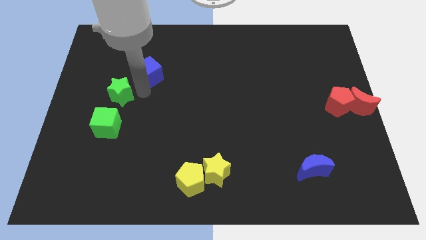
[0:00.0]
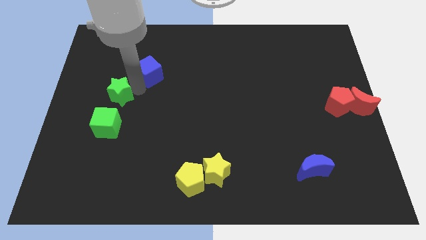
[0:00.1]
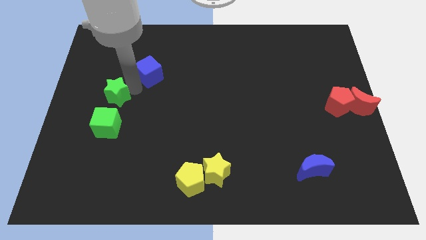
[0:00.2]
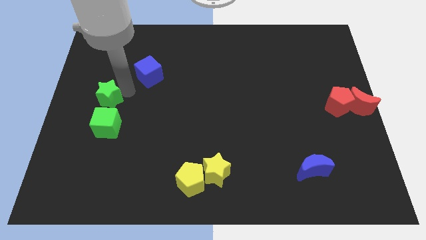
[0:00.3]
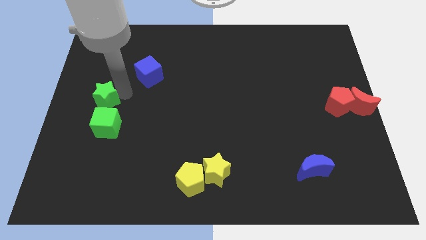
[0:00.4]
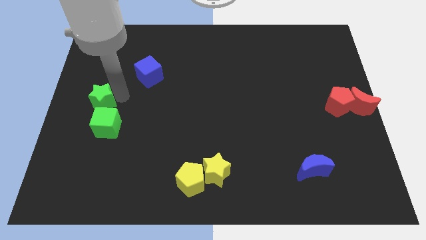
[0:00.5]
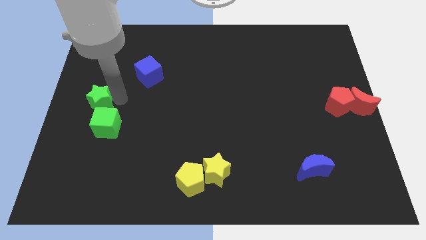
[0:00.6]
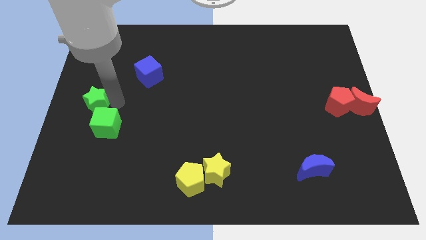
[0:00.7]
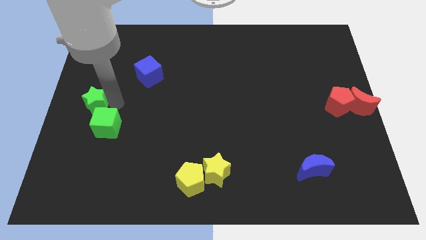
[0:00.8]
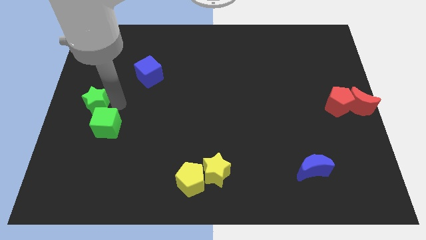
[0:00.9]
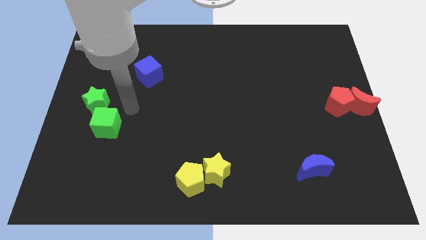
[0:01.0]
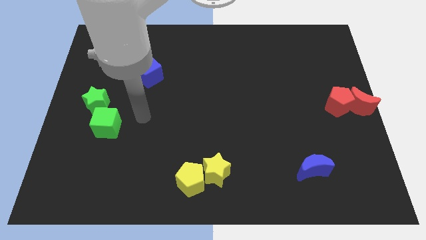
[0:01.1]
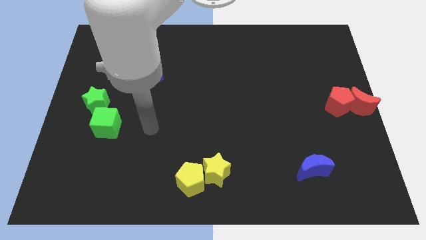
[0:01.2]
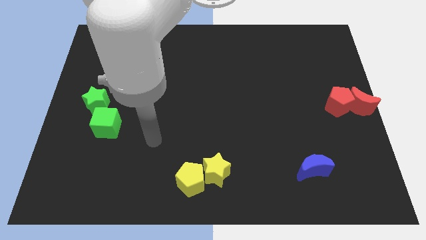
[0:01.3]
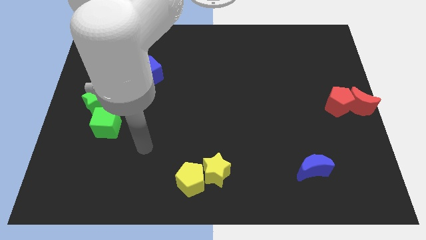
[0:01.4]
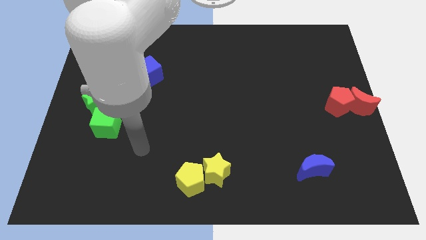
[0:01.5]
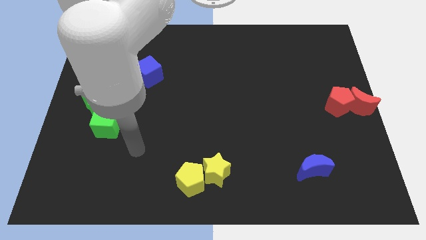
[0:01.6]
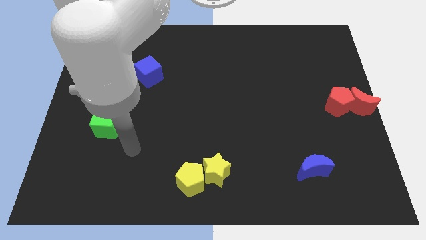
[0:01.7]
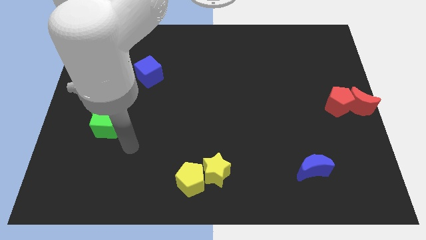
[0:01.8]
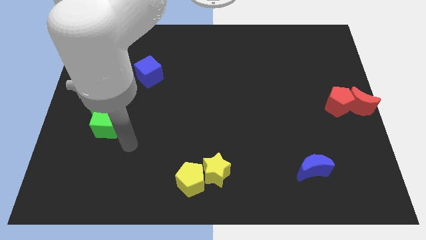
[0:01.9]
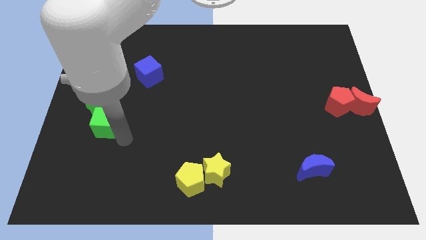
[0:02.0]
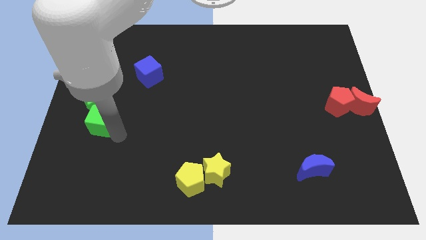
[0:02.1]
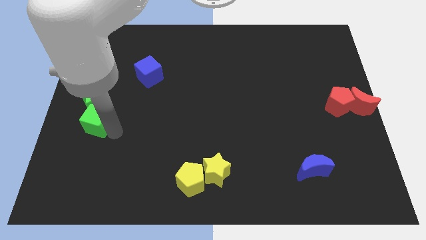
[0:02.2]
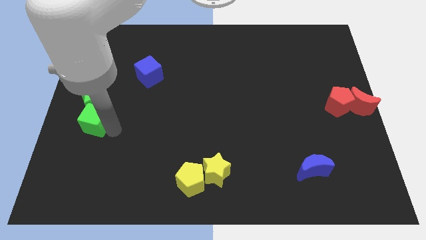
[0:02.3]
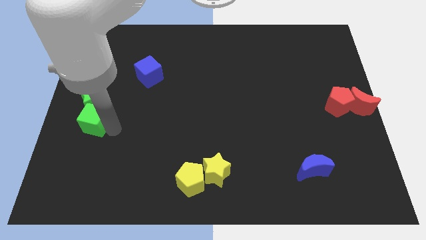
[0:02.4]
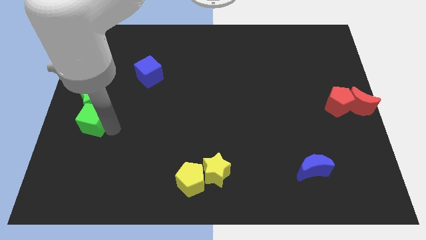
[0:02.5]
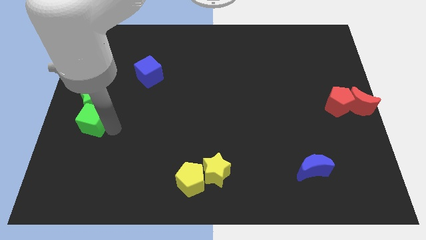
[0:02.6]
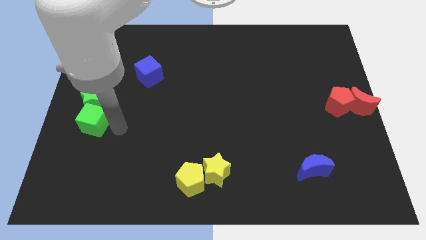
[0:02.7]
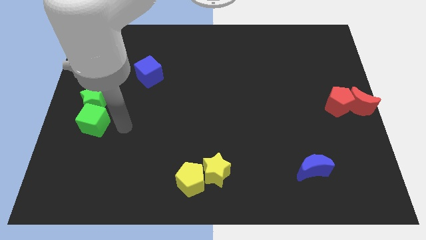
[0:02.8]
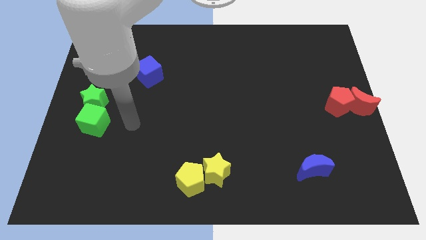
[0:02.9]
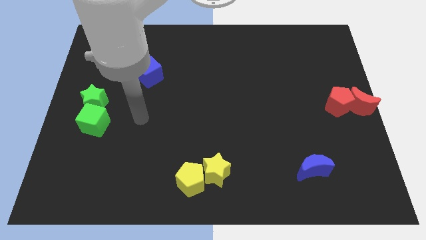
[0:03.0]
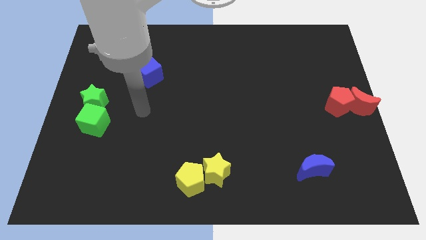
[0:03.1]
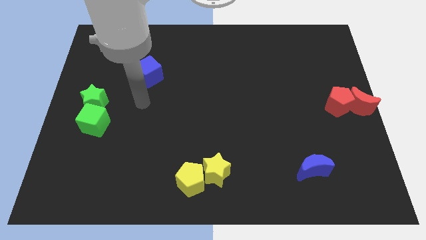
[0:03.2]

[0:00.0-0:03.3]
place the green blocks together at the center left of the board

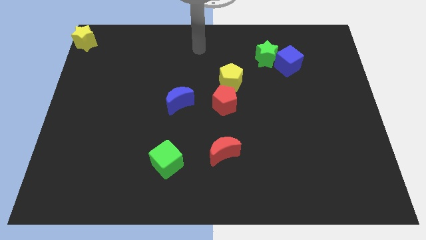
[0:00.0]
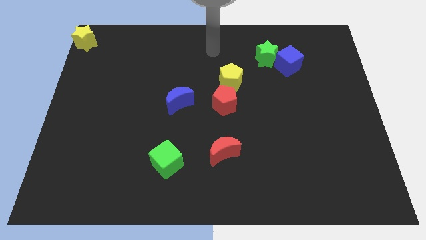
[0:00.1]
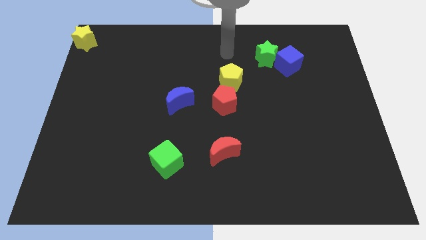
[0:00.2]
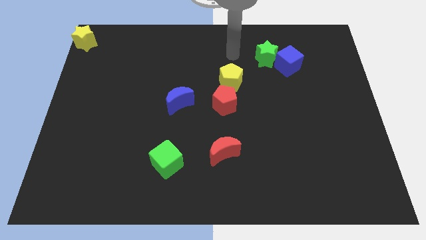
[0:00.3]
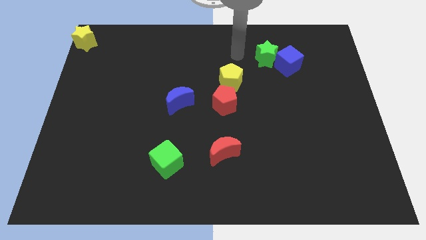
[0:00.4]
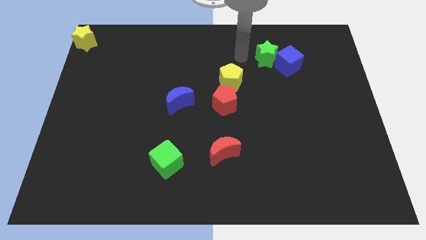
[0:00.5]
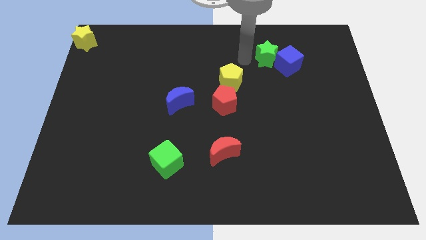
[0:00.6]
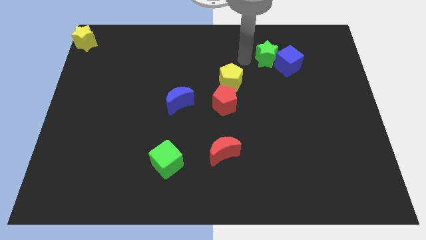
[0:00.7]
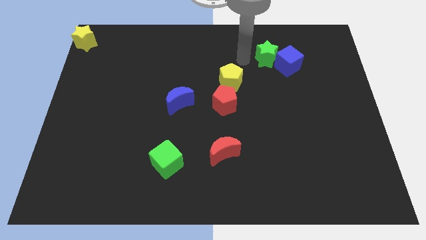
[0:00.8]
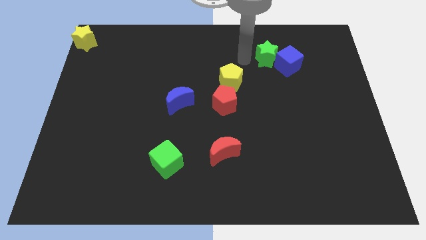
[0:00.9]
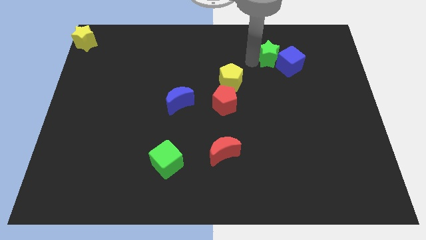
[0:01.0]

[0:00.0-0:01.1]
touch the left side of the green star

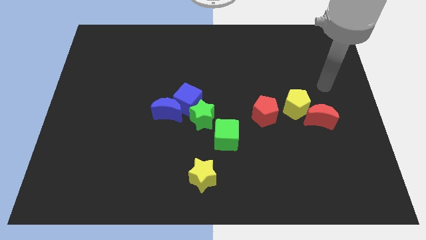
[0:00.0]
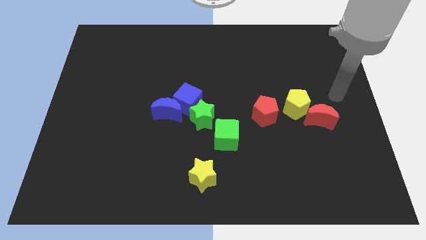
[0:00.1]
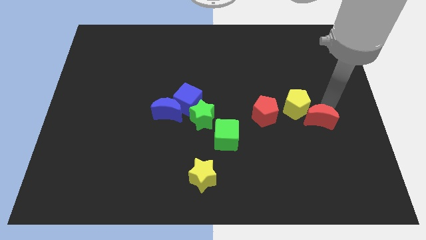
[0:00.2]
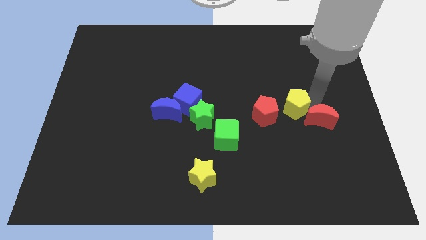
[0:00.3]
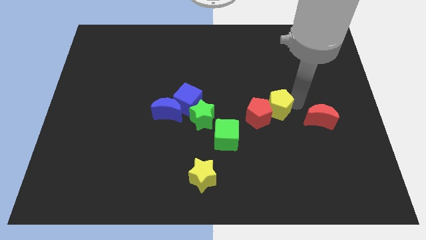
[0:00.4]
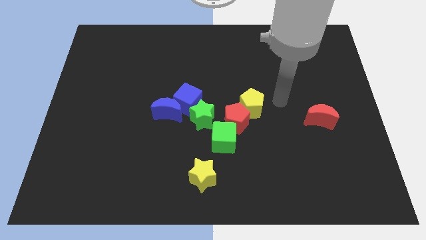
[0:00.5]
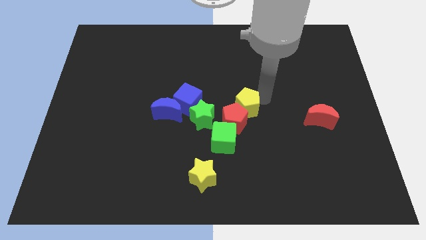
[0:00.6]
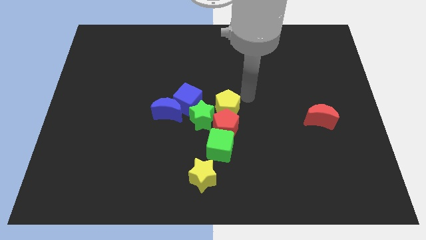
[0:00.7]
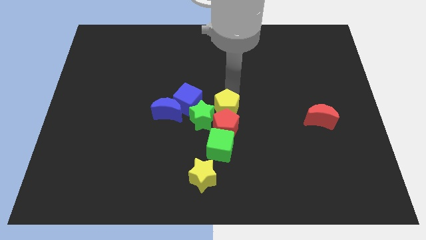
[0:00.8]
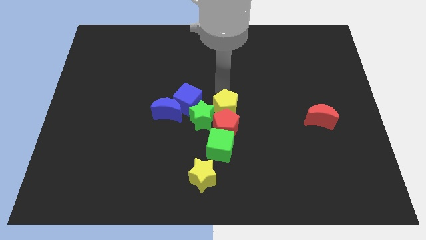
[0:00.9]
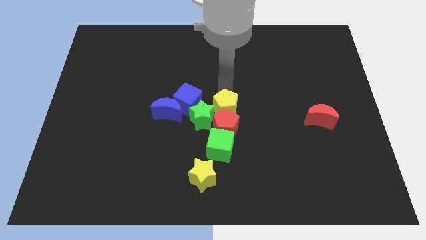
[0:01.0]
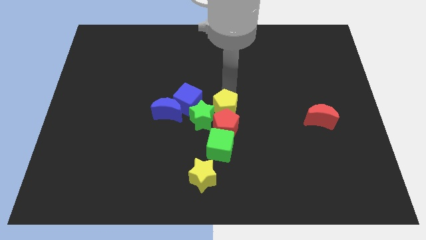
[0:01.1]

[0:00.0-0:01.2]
move red pentagon and yellow pentagon towards the group of blocks

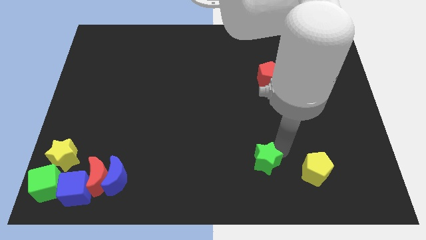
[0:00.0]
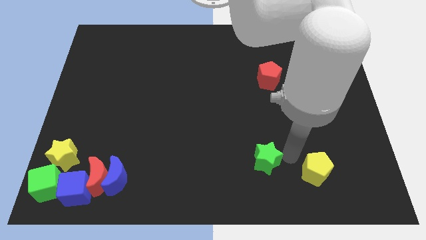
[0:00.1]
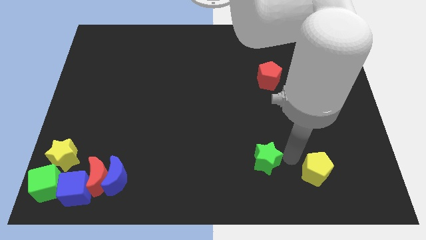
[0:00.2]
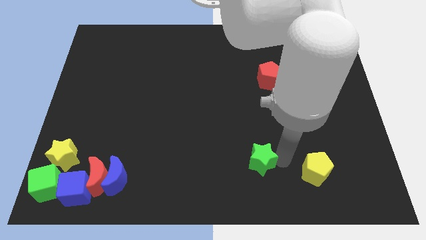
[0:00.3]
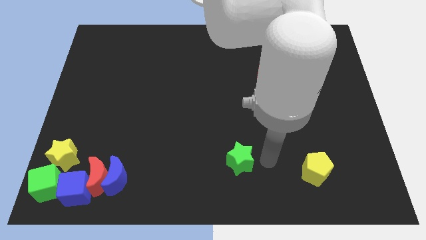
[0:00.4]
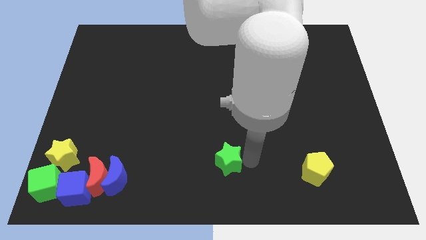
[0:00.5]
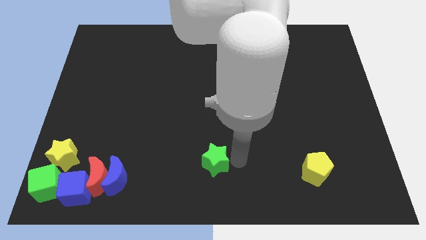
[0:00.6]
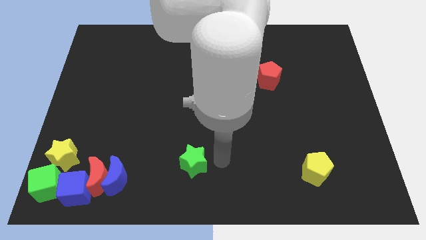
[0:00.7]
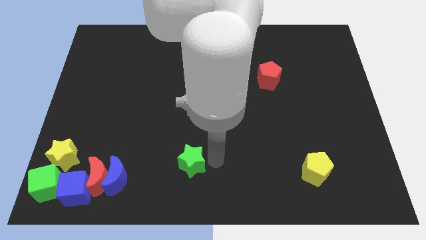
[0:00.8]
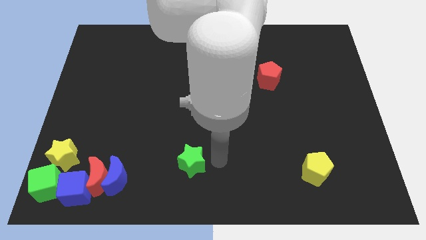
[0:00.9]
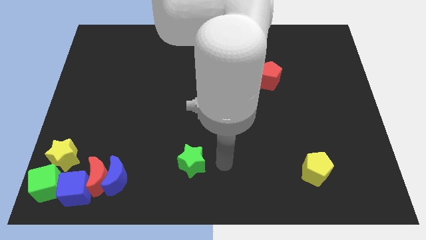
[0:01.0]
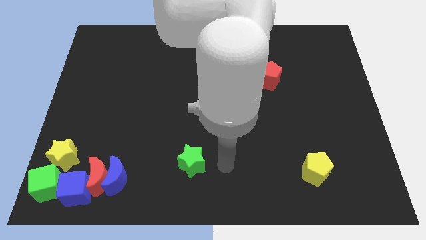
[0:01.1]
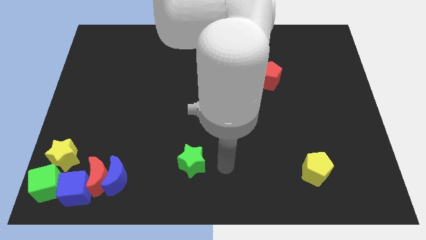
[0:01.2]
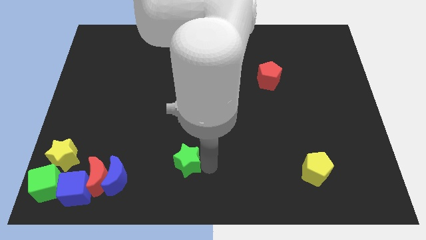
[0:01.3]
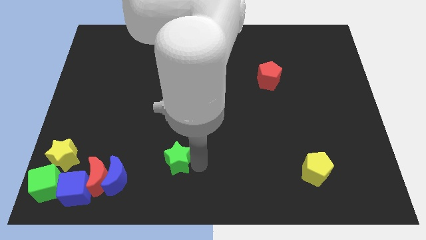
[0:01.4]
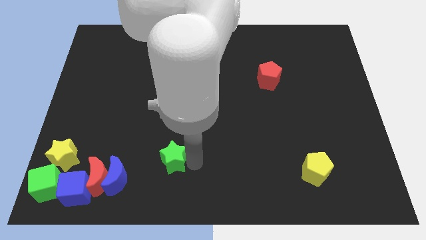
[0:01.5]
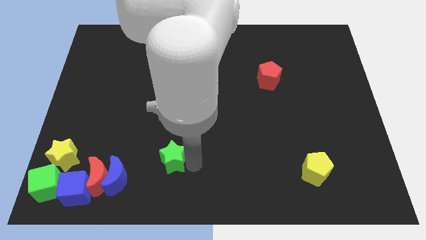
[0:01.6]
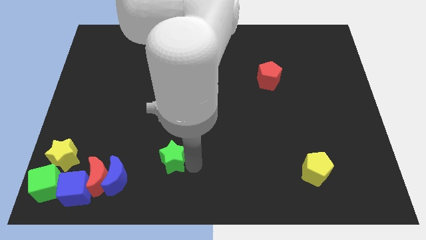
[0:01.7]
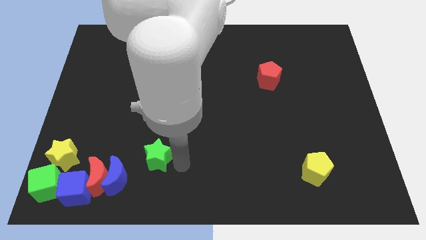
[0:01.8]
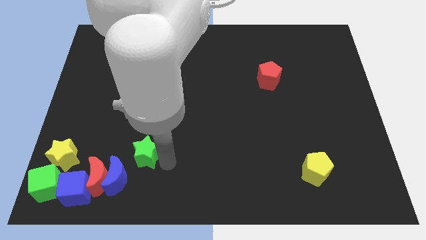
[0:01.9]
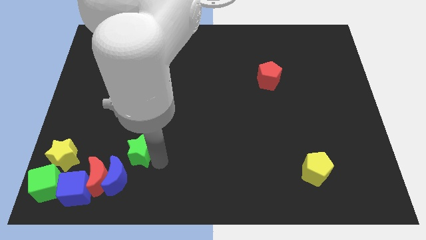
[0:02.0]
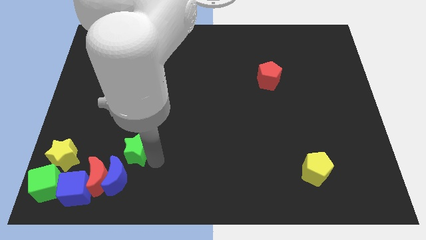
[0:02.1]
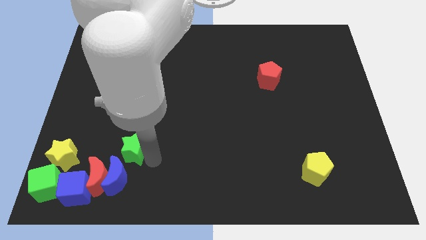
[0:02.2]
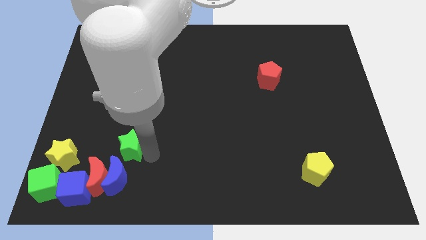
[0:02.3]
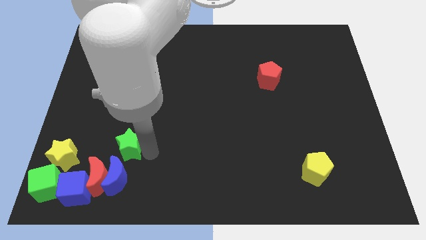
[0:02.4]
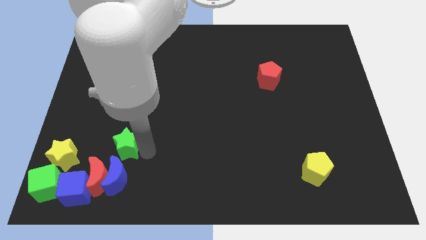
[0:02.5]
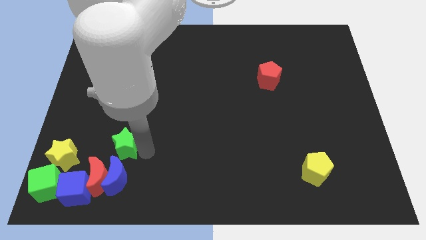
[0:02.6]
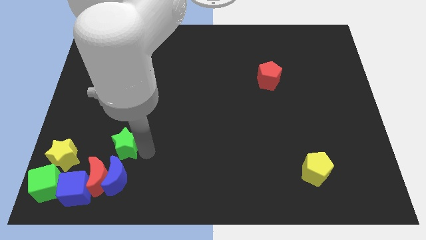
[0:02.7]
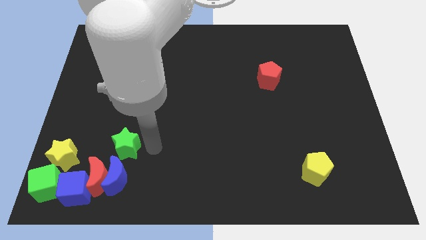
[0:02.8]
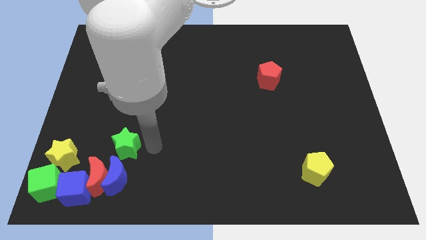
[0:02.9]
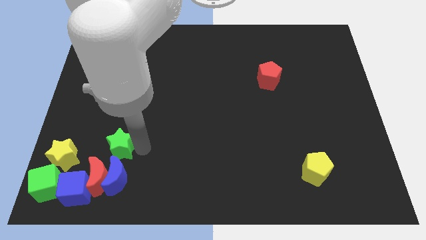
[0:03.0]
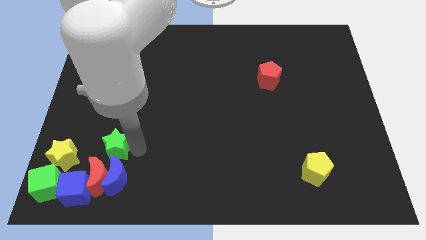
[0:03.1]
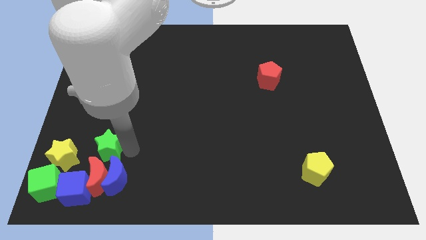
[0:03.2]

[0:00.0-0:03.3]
place the green star to the top of the blue moon

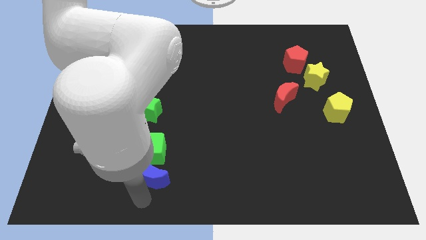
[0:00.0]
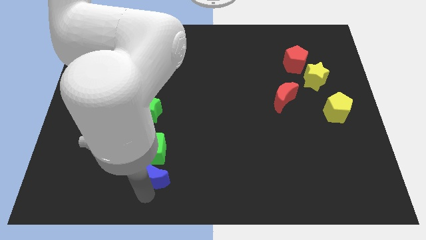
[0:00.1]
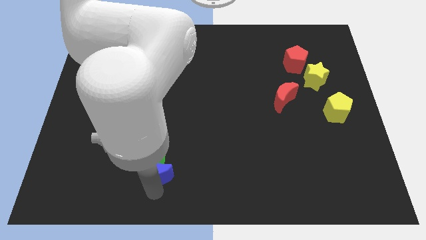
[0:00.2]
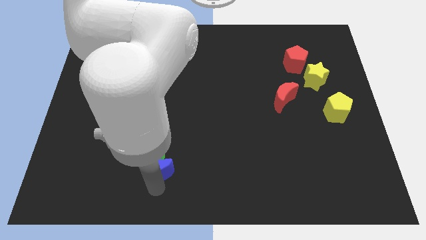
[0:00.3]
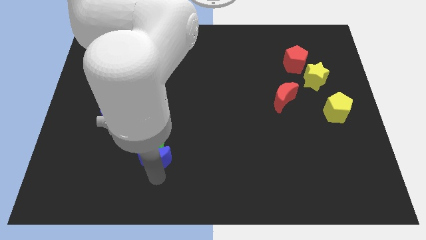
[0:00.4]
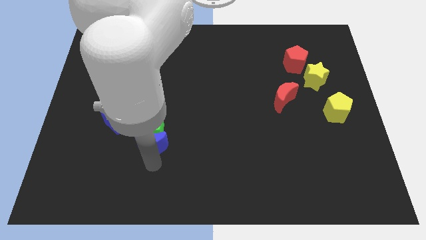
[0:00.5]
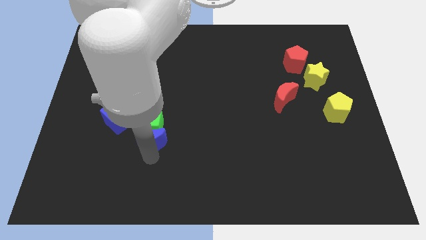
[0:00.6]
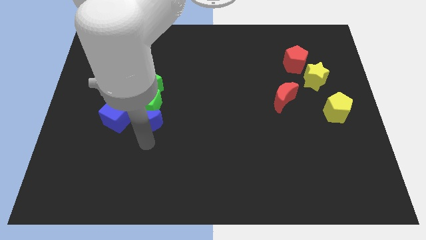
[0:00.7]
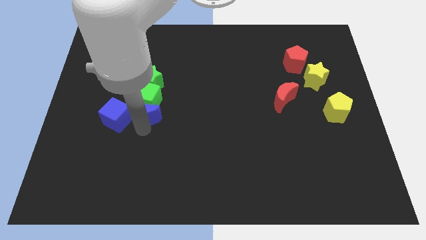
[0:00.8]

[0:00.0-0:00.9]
push the blue crescent to the bottom of the green cube
